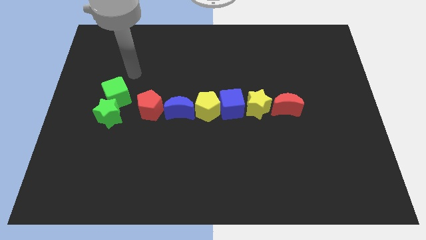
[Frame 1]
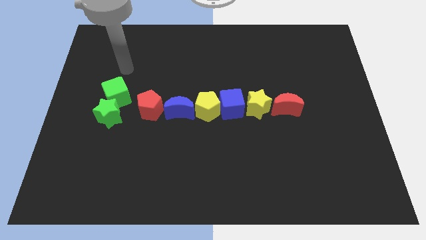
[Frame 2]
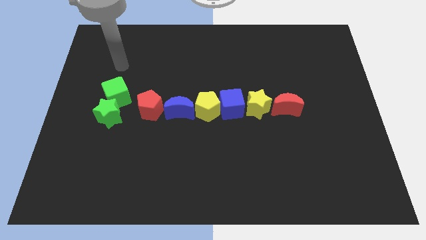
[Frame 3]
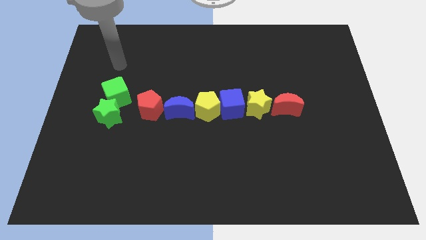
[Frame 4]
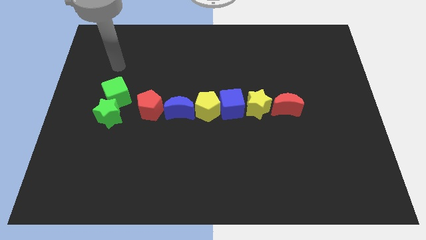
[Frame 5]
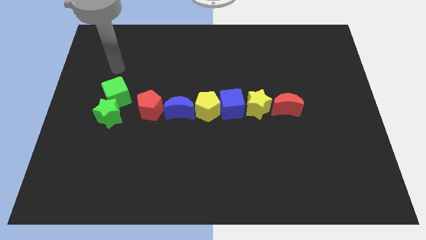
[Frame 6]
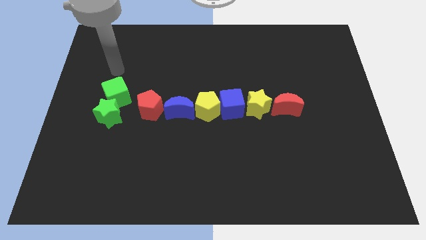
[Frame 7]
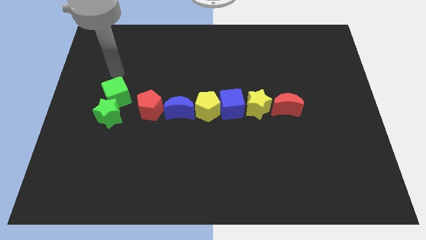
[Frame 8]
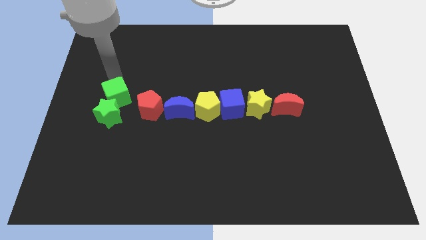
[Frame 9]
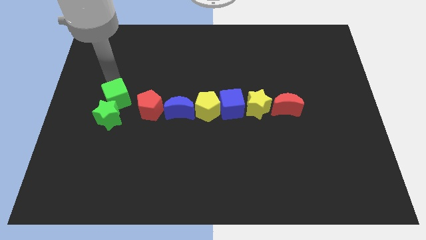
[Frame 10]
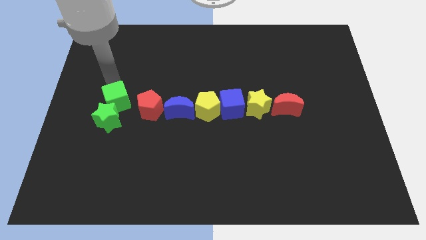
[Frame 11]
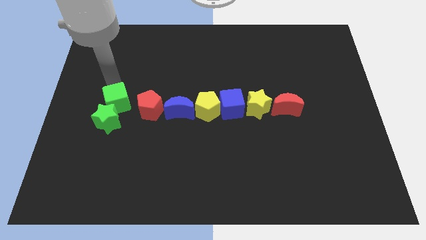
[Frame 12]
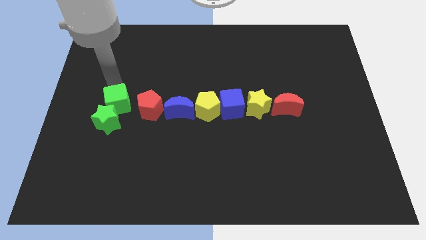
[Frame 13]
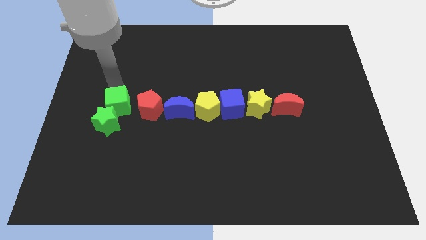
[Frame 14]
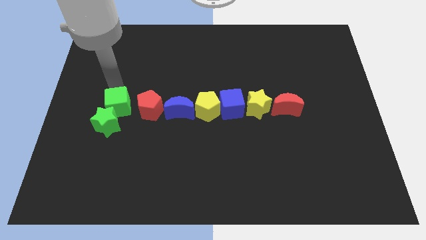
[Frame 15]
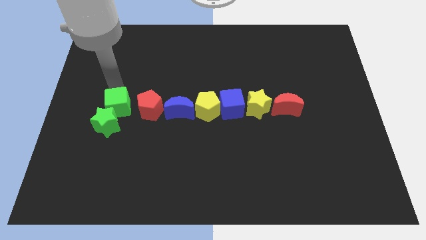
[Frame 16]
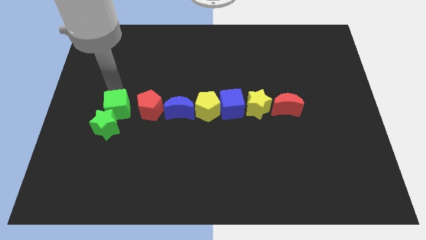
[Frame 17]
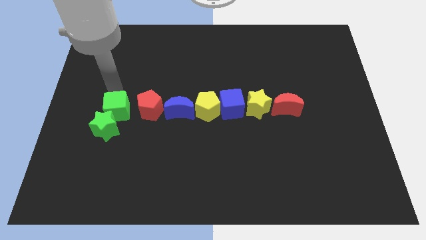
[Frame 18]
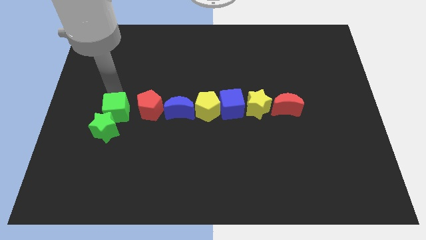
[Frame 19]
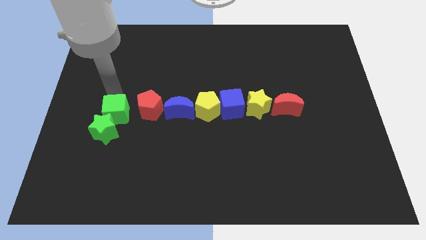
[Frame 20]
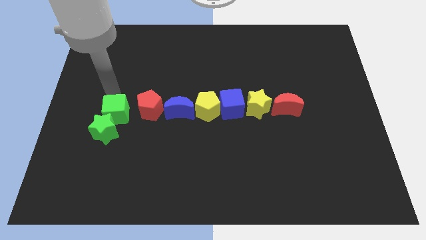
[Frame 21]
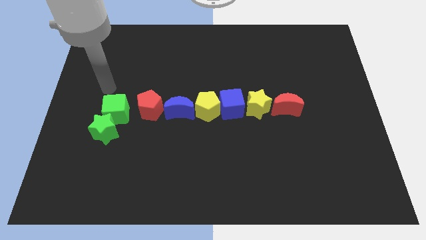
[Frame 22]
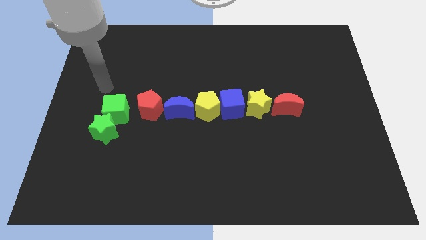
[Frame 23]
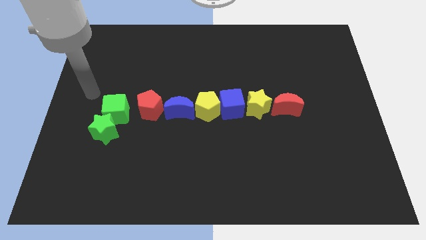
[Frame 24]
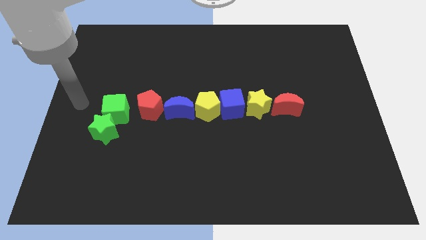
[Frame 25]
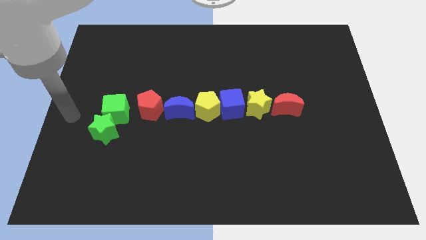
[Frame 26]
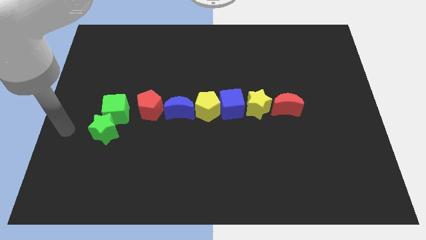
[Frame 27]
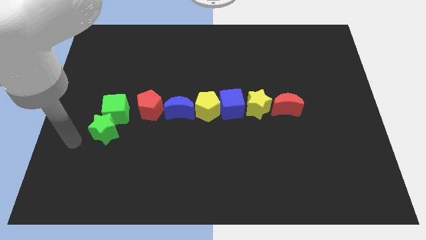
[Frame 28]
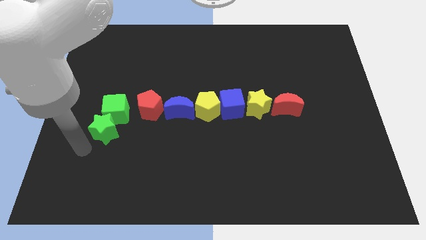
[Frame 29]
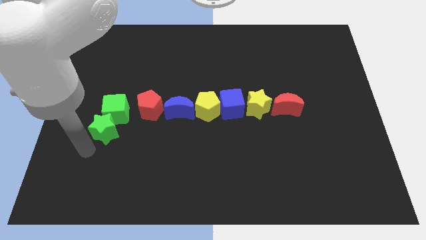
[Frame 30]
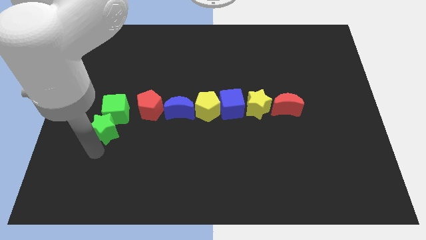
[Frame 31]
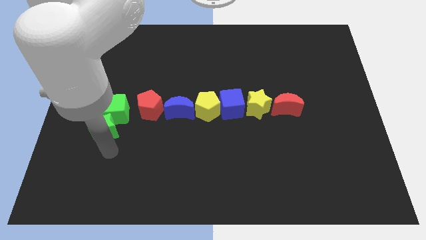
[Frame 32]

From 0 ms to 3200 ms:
place red pentagon left to blue moon

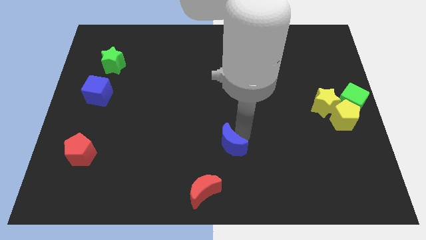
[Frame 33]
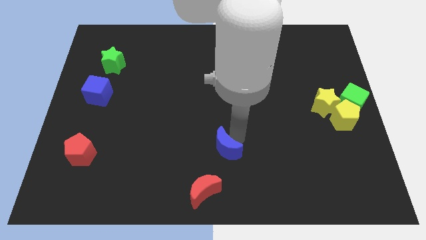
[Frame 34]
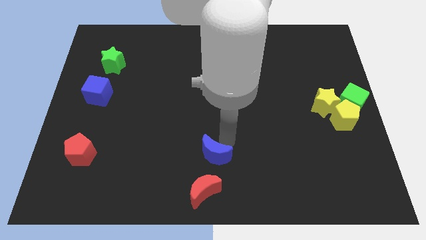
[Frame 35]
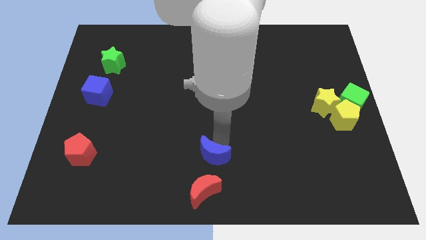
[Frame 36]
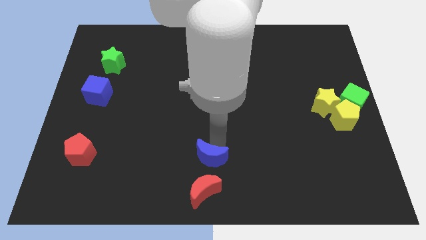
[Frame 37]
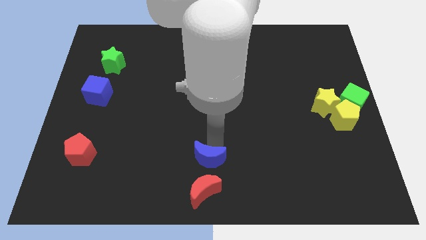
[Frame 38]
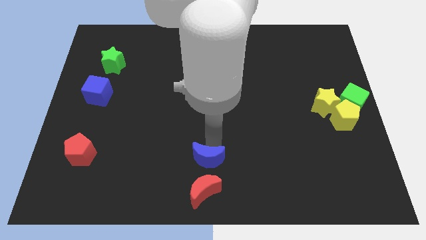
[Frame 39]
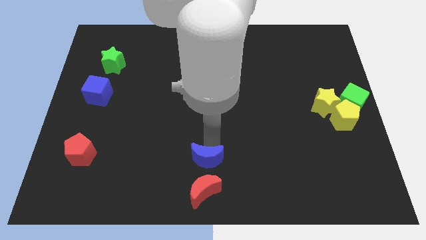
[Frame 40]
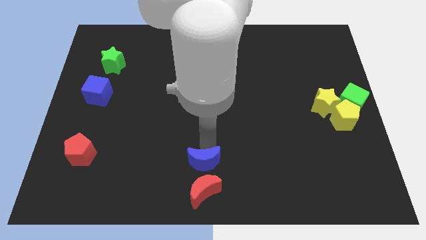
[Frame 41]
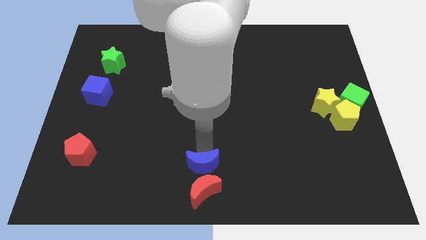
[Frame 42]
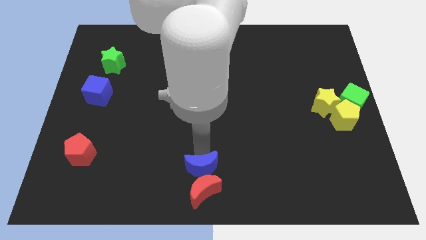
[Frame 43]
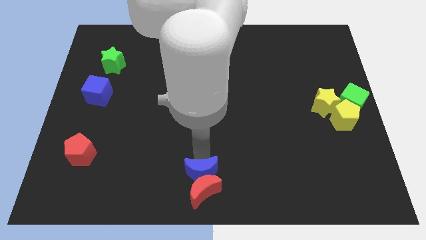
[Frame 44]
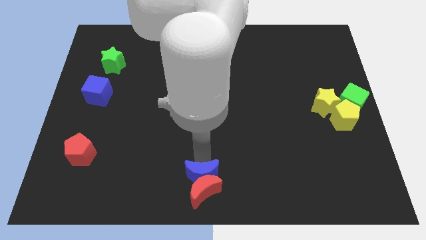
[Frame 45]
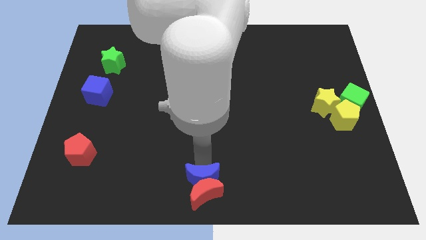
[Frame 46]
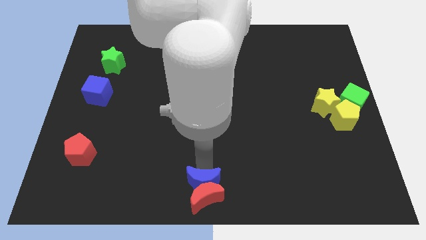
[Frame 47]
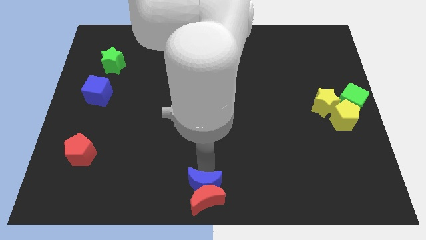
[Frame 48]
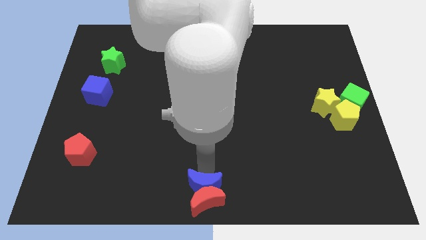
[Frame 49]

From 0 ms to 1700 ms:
place the blue crescent on top of the red crescent

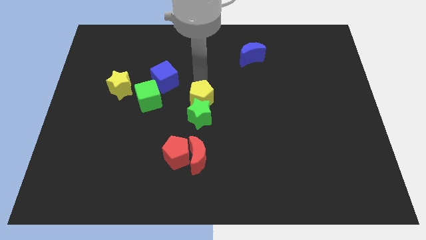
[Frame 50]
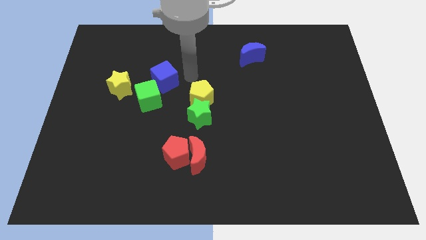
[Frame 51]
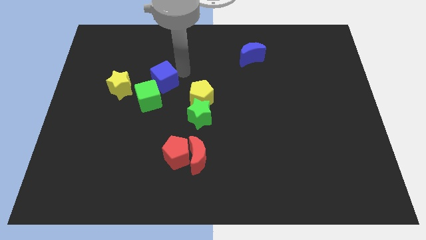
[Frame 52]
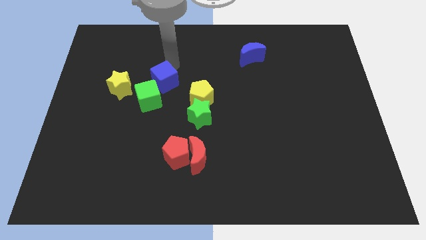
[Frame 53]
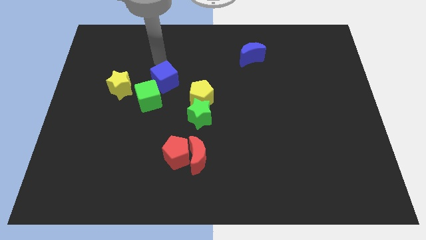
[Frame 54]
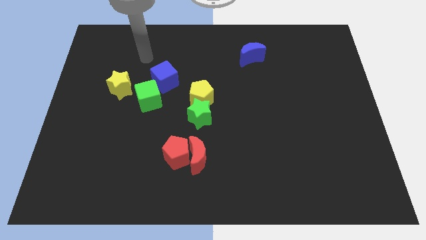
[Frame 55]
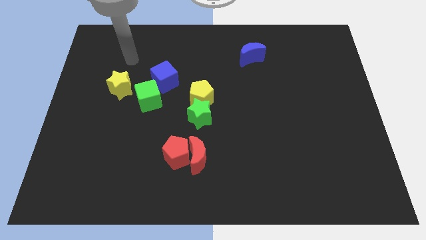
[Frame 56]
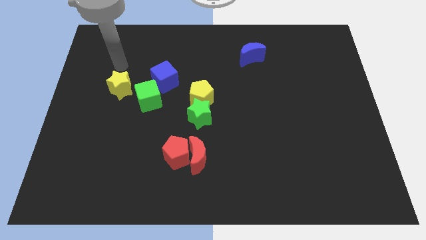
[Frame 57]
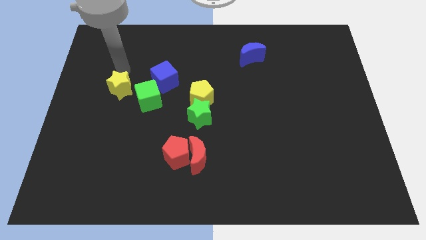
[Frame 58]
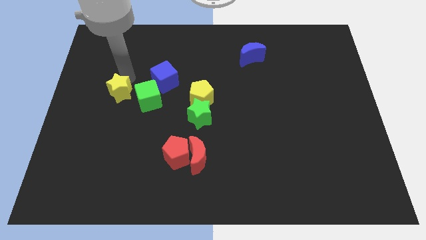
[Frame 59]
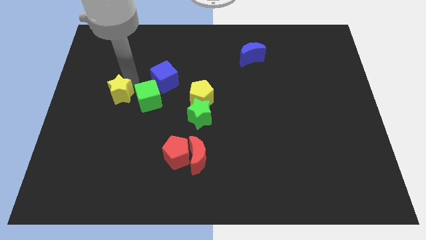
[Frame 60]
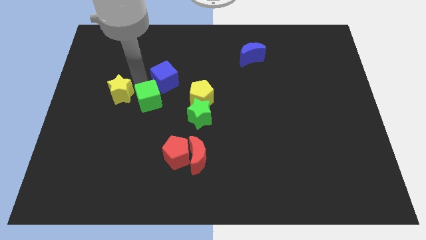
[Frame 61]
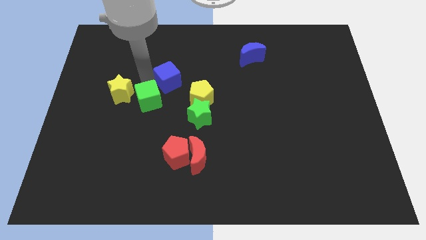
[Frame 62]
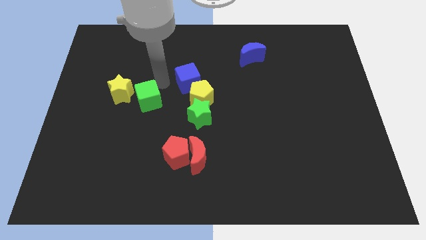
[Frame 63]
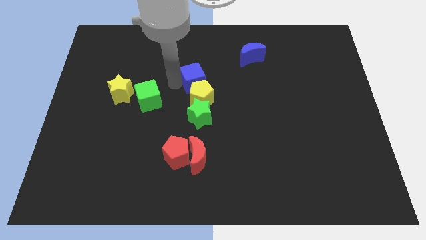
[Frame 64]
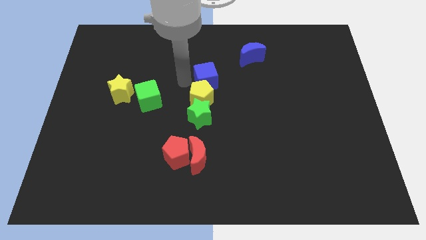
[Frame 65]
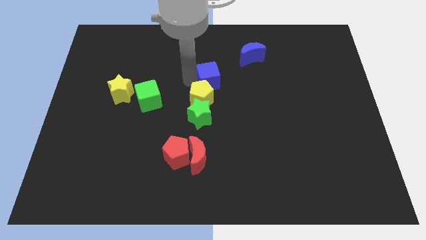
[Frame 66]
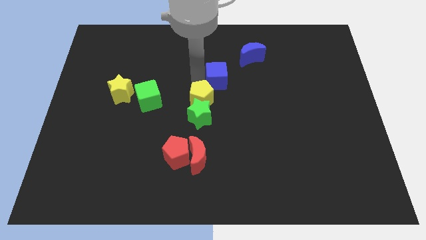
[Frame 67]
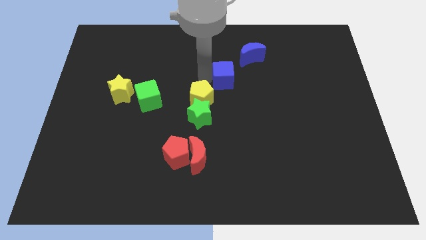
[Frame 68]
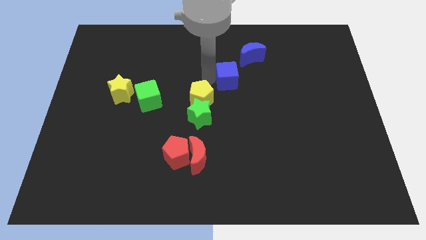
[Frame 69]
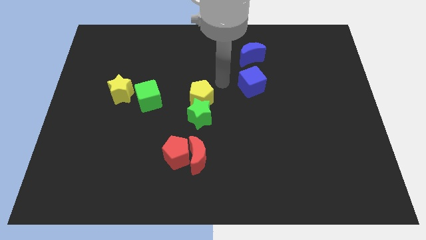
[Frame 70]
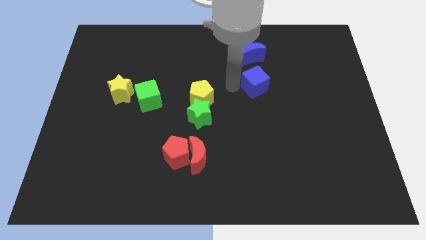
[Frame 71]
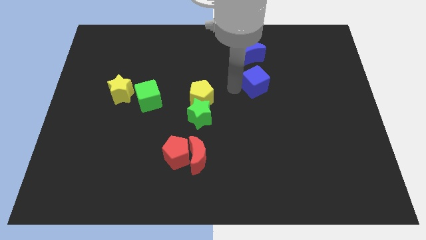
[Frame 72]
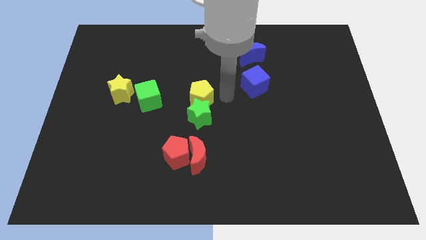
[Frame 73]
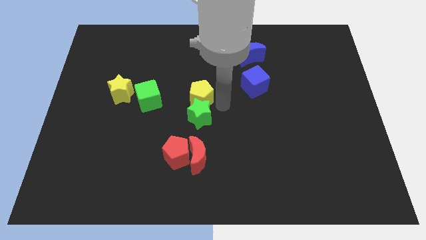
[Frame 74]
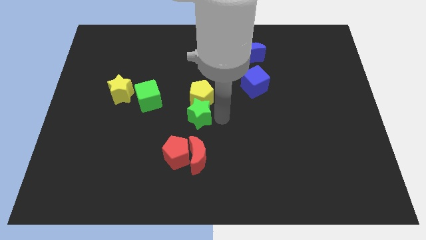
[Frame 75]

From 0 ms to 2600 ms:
push the yellow star and blue cube in different directions

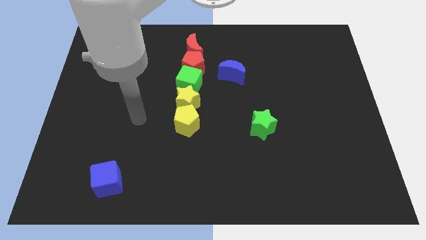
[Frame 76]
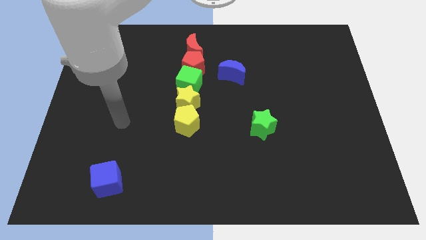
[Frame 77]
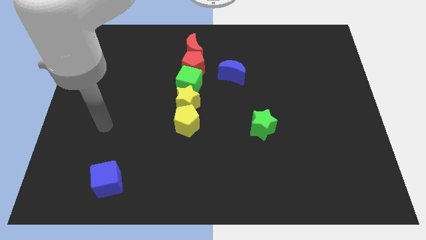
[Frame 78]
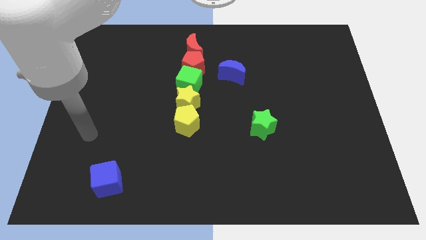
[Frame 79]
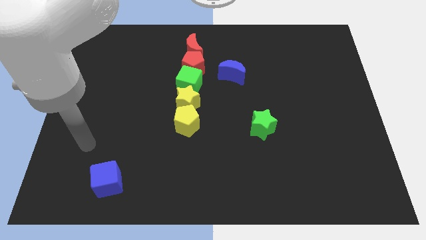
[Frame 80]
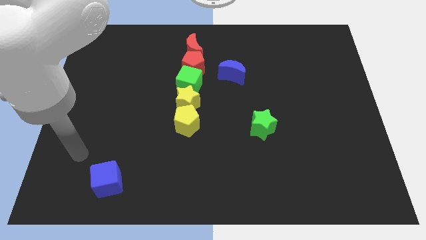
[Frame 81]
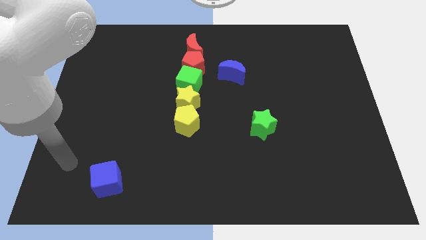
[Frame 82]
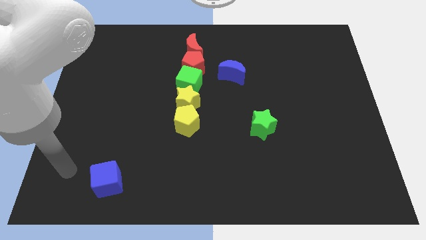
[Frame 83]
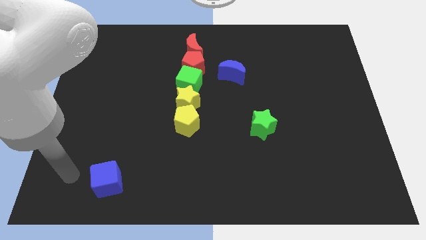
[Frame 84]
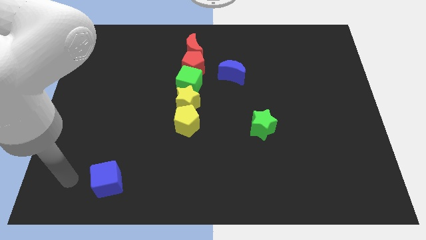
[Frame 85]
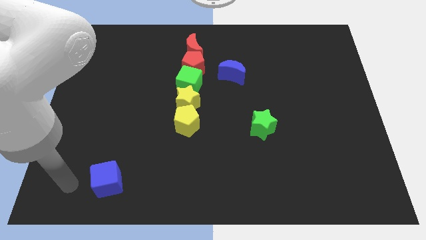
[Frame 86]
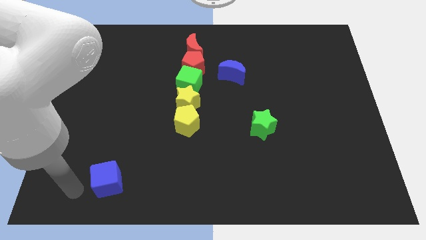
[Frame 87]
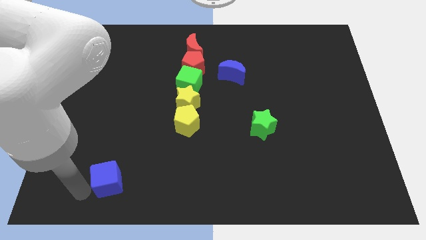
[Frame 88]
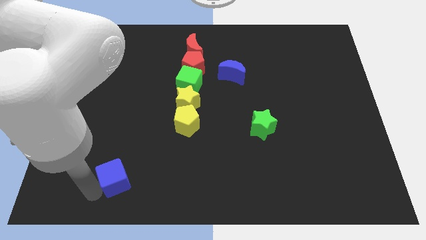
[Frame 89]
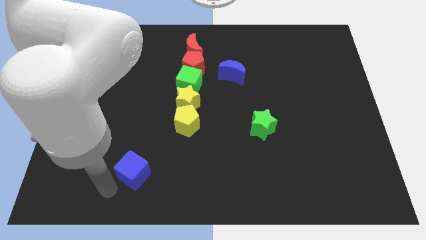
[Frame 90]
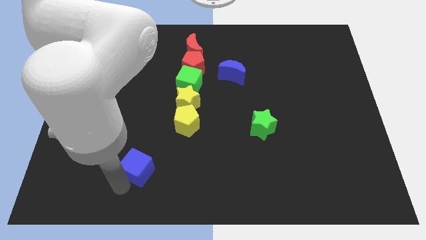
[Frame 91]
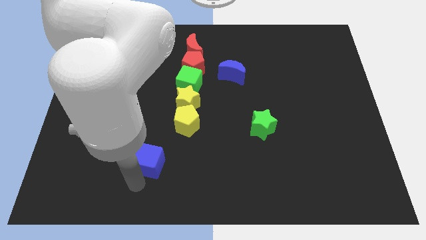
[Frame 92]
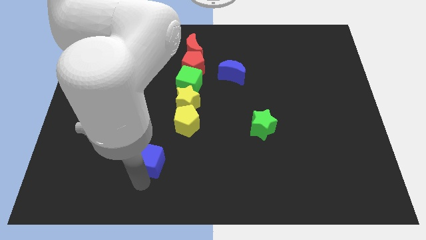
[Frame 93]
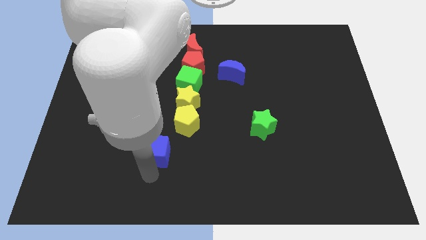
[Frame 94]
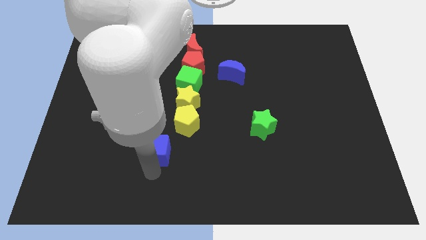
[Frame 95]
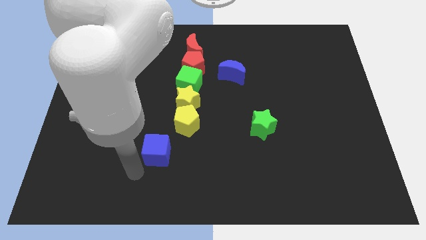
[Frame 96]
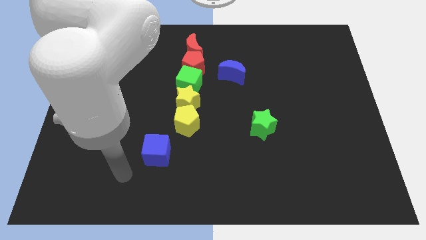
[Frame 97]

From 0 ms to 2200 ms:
push the blue cube towards yellow pentagon to the left bottom
